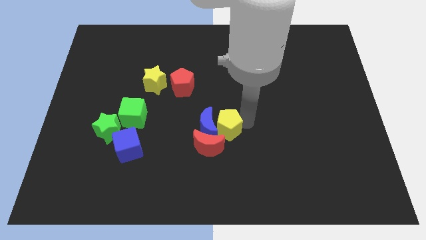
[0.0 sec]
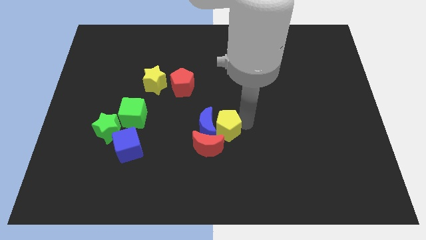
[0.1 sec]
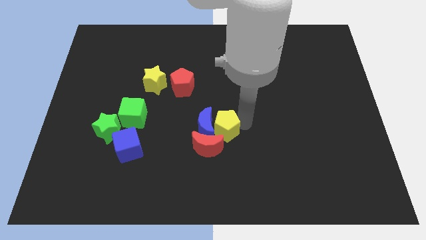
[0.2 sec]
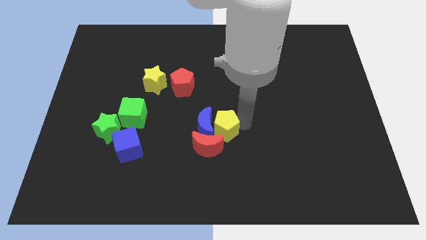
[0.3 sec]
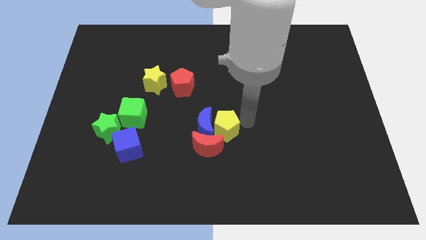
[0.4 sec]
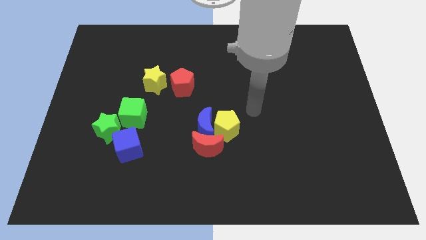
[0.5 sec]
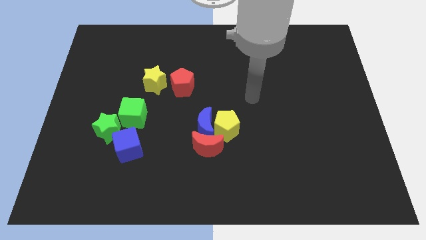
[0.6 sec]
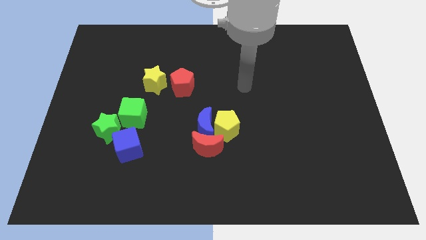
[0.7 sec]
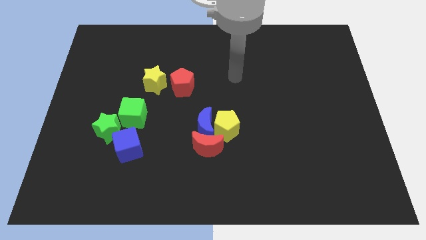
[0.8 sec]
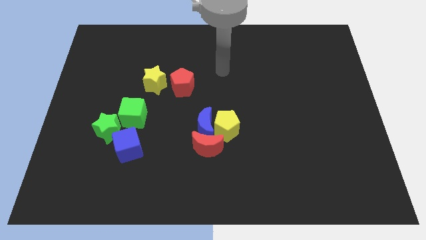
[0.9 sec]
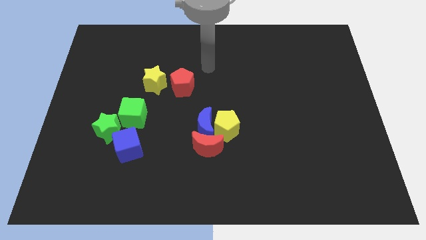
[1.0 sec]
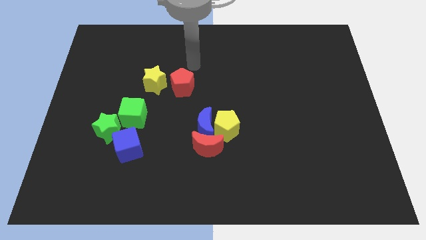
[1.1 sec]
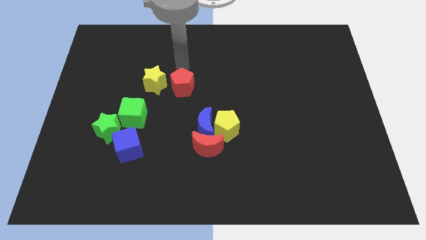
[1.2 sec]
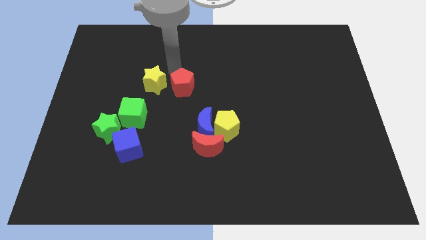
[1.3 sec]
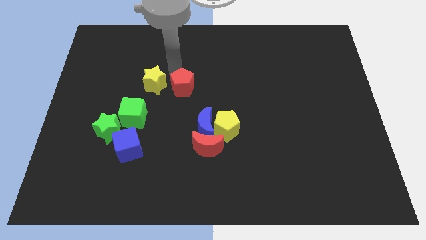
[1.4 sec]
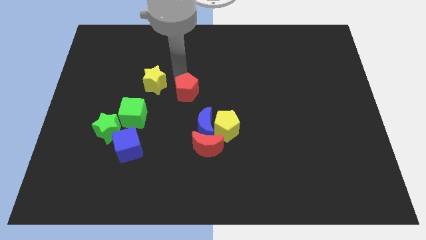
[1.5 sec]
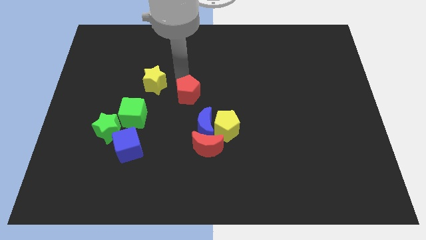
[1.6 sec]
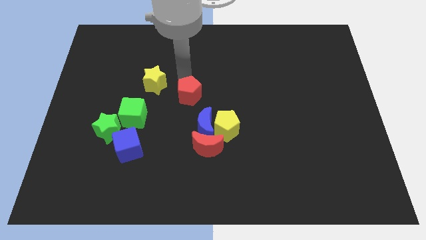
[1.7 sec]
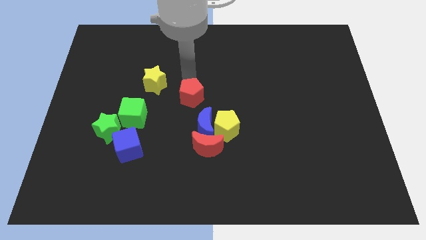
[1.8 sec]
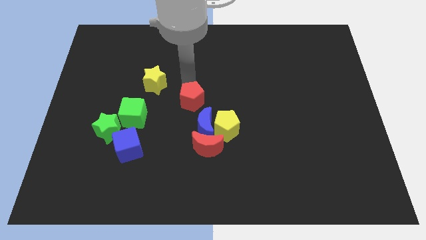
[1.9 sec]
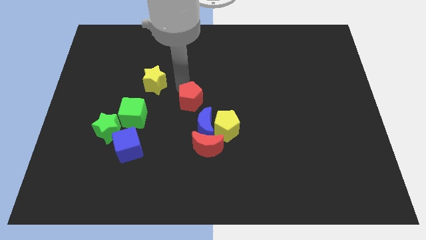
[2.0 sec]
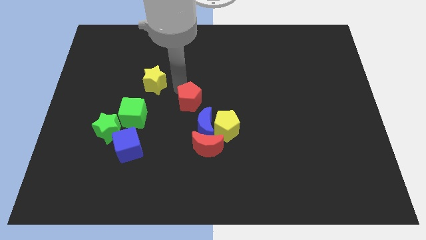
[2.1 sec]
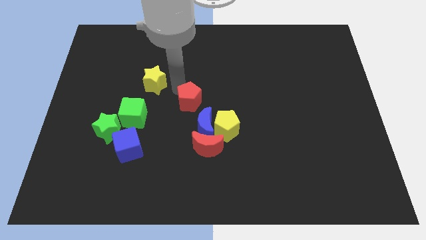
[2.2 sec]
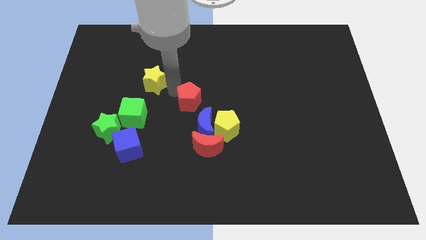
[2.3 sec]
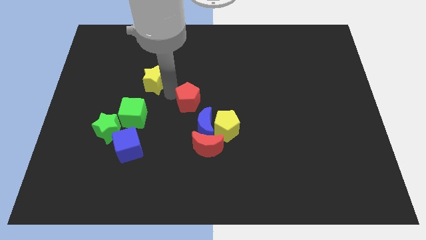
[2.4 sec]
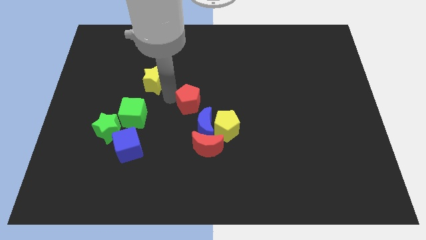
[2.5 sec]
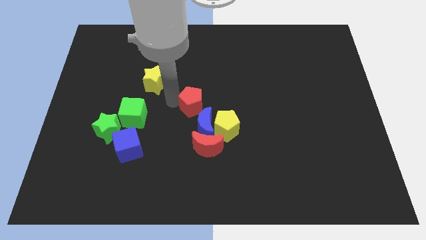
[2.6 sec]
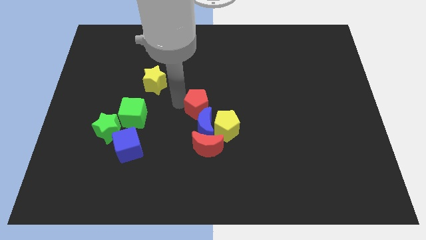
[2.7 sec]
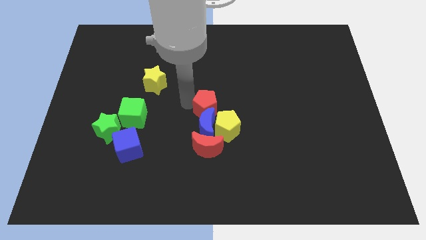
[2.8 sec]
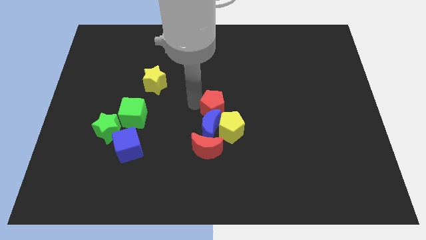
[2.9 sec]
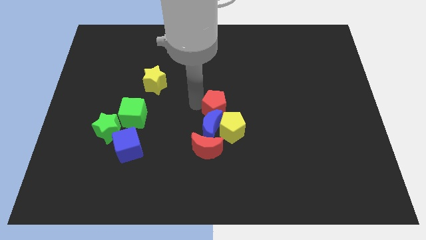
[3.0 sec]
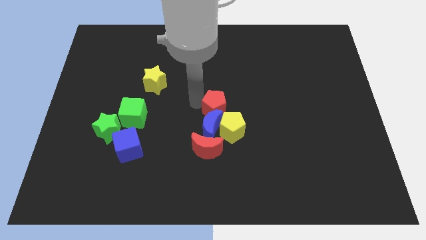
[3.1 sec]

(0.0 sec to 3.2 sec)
adjust the red pentagon on the top of the blue moon

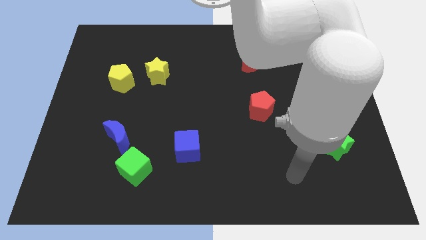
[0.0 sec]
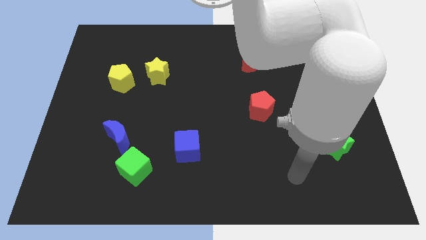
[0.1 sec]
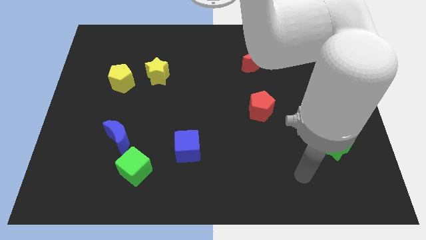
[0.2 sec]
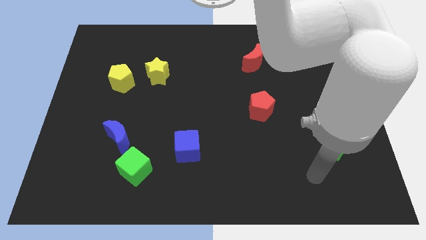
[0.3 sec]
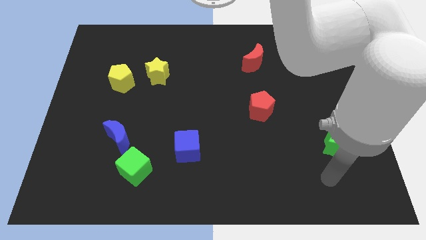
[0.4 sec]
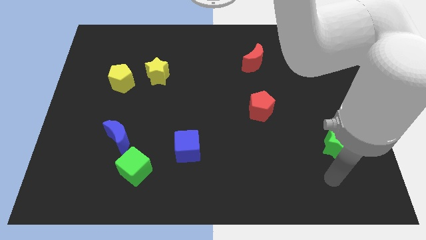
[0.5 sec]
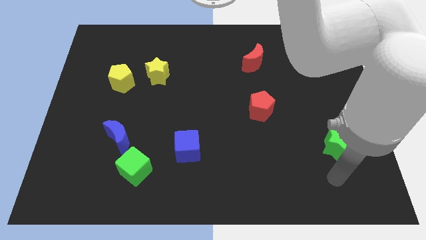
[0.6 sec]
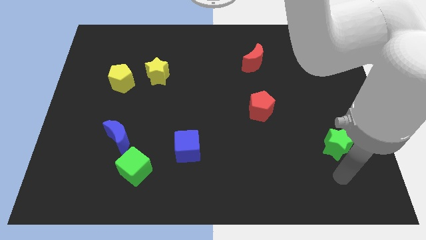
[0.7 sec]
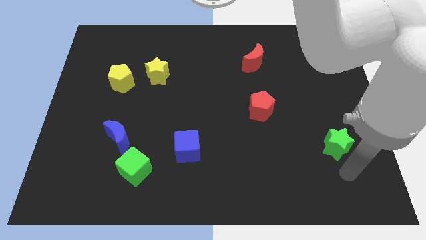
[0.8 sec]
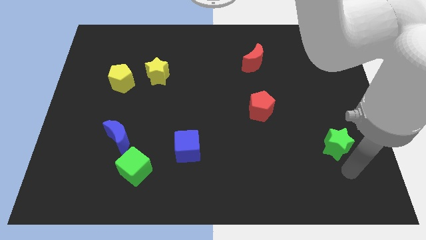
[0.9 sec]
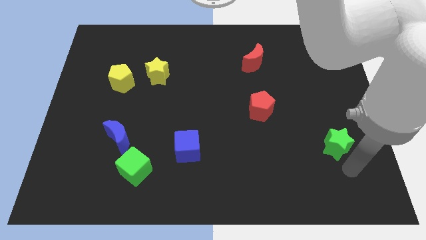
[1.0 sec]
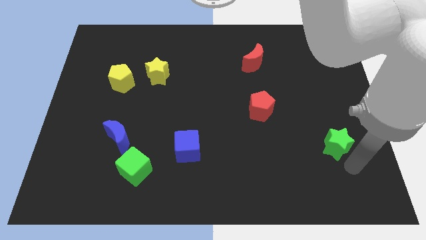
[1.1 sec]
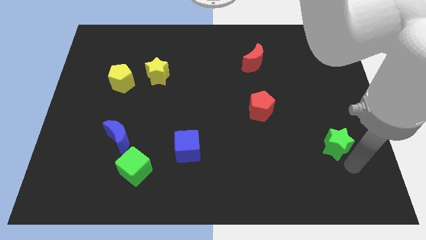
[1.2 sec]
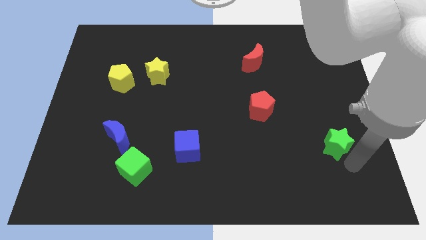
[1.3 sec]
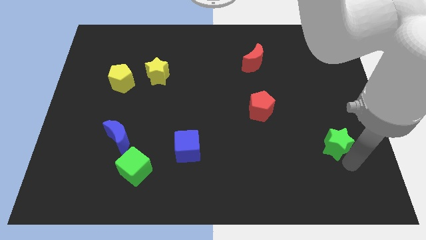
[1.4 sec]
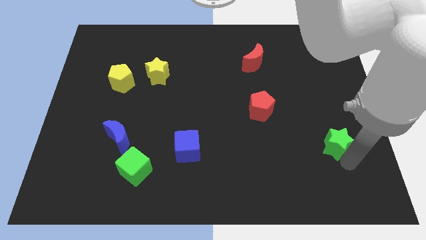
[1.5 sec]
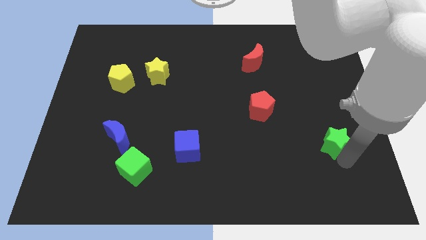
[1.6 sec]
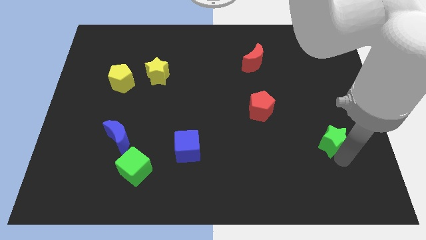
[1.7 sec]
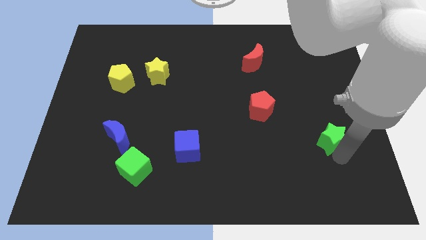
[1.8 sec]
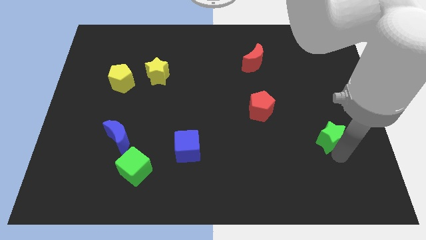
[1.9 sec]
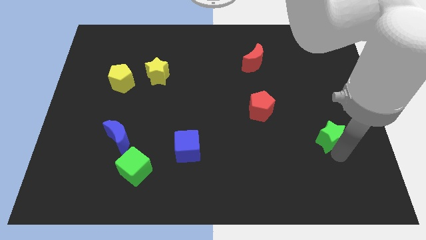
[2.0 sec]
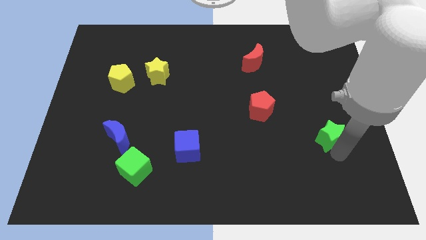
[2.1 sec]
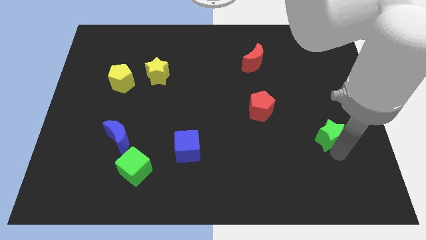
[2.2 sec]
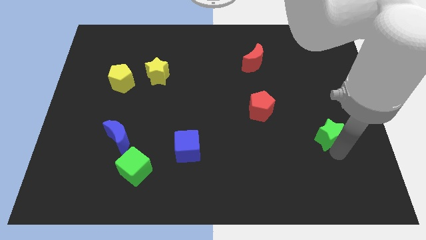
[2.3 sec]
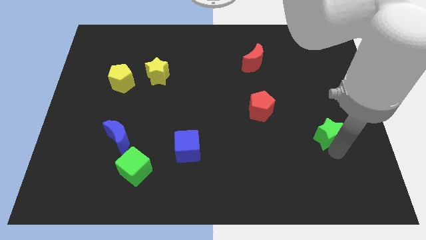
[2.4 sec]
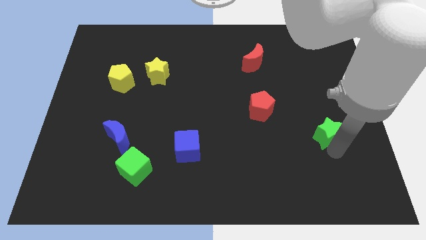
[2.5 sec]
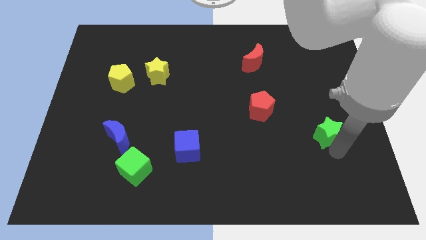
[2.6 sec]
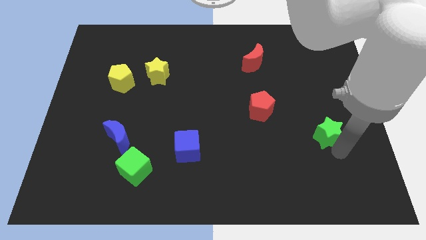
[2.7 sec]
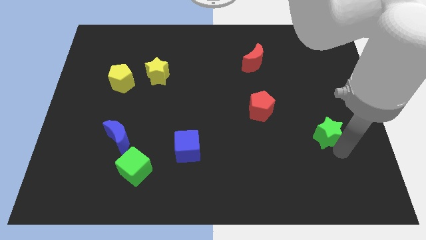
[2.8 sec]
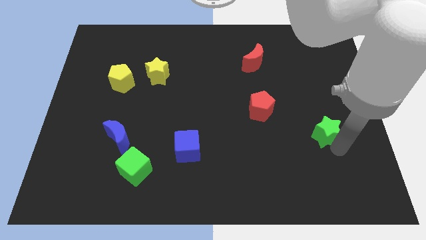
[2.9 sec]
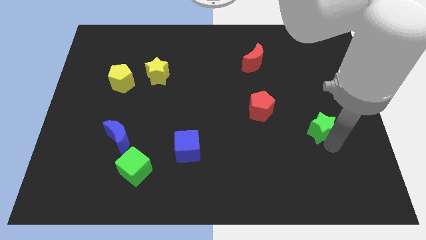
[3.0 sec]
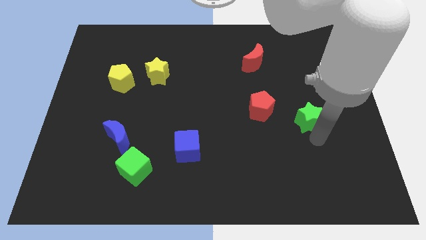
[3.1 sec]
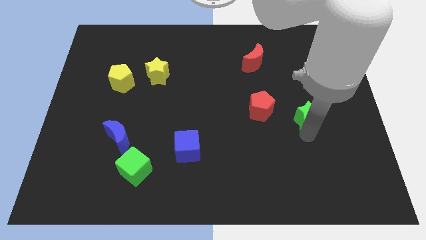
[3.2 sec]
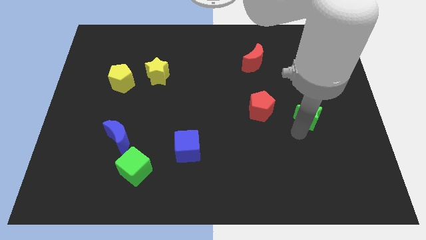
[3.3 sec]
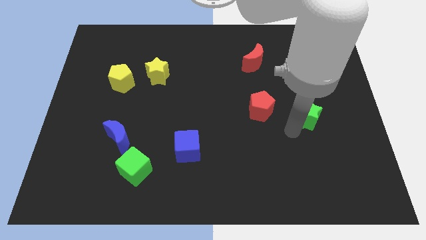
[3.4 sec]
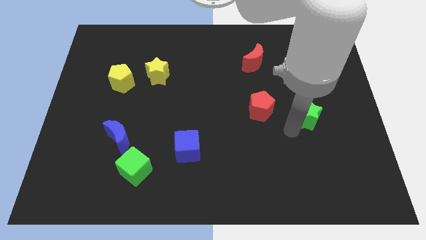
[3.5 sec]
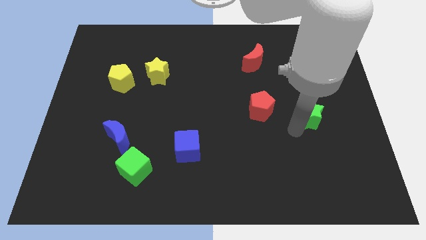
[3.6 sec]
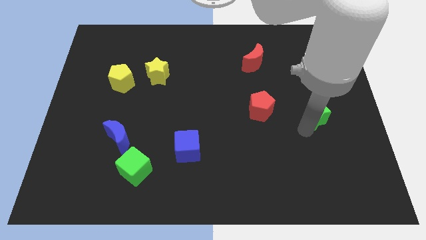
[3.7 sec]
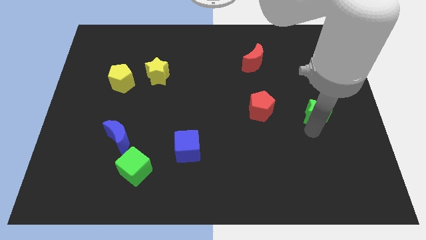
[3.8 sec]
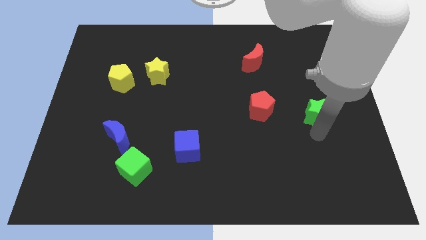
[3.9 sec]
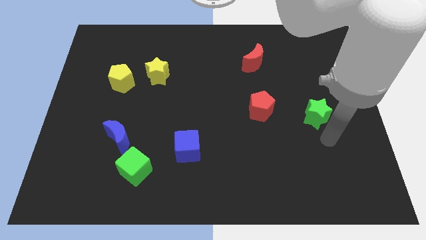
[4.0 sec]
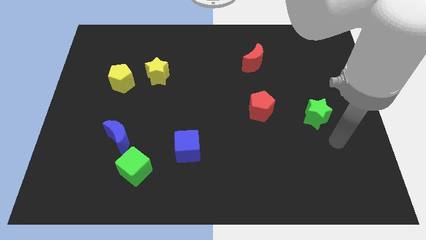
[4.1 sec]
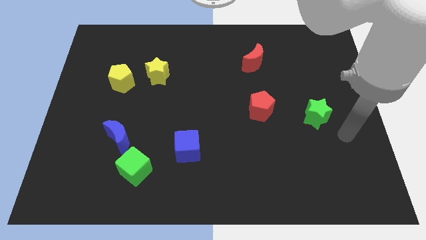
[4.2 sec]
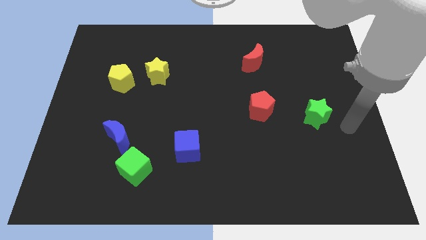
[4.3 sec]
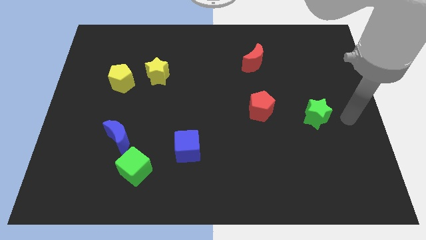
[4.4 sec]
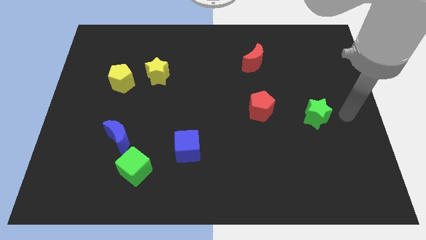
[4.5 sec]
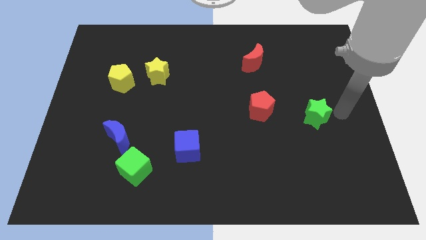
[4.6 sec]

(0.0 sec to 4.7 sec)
place the green star to the right side of red pentagon

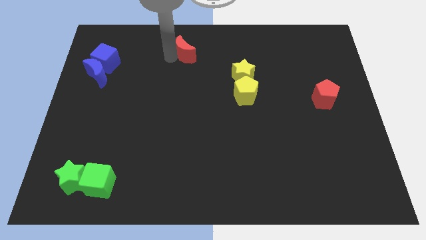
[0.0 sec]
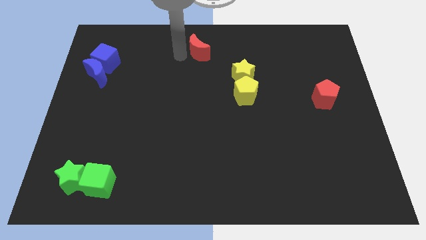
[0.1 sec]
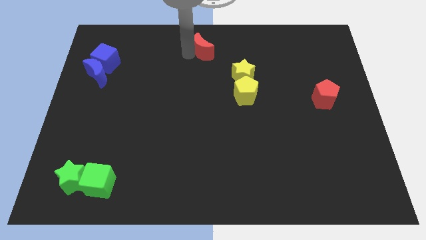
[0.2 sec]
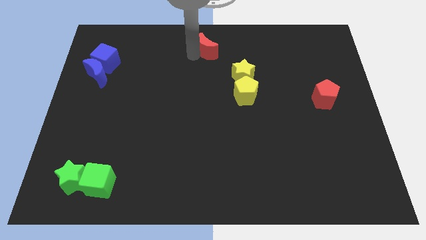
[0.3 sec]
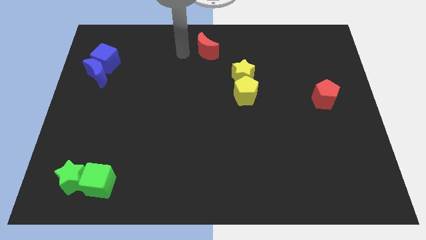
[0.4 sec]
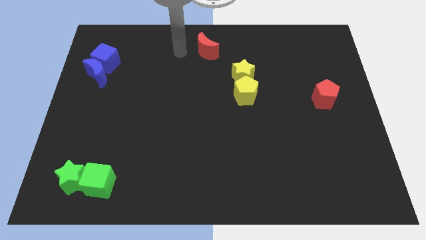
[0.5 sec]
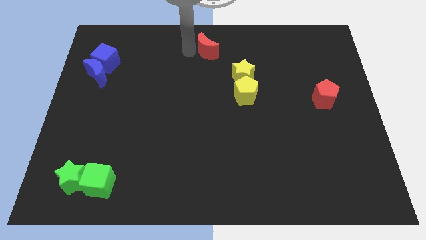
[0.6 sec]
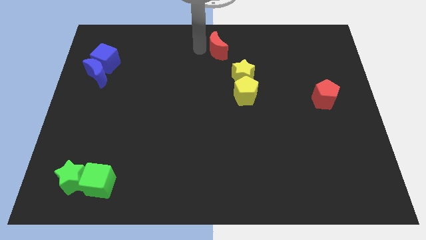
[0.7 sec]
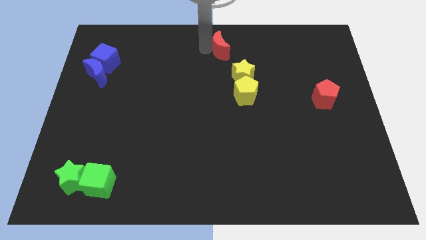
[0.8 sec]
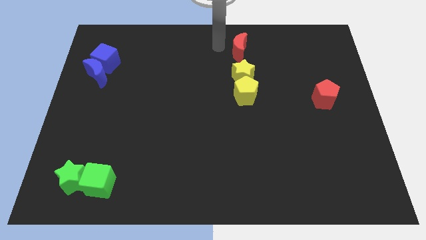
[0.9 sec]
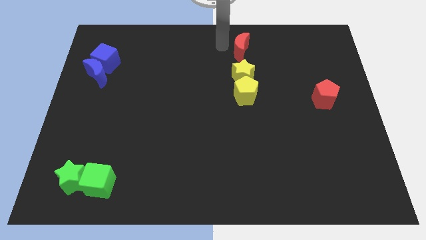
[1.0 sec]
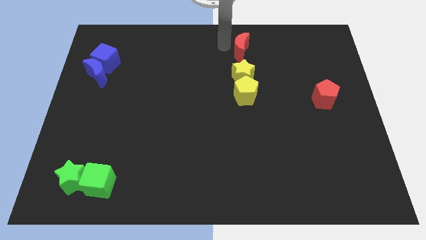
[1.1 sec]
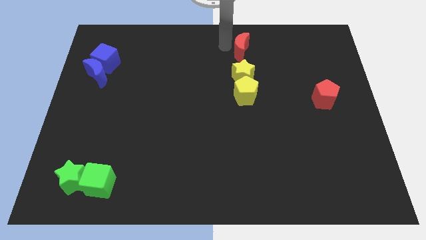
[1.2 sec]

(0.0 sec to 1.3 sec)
move the red moon above the yellow star
